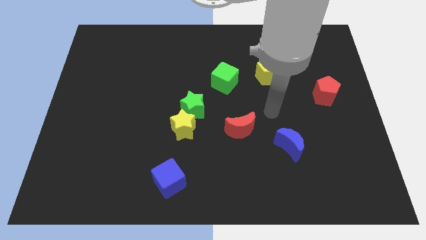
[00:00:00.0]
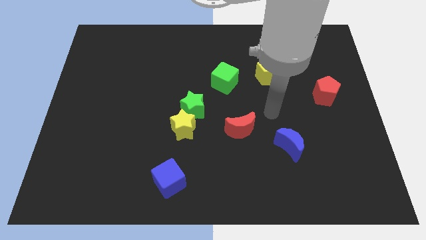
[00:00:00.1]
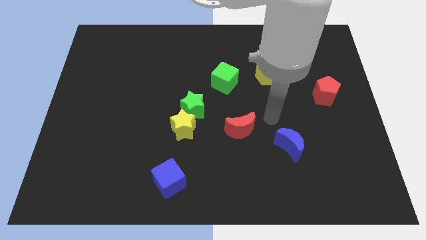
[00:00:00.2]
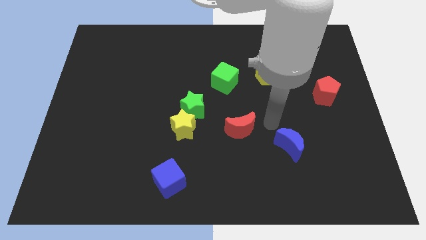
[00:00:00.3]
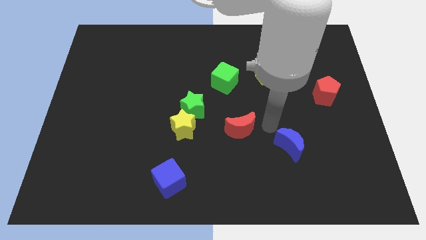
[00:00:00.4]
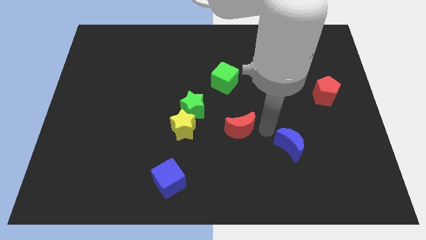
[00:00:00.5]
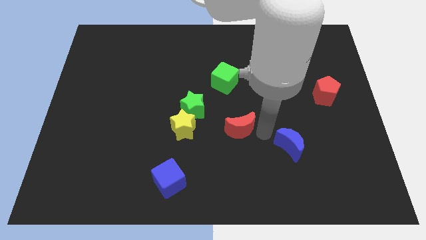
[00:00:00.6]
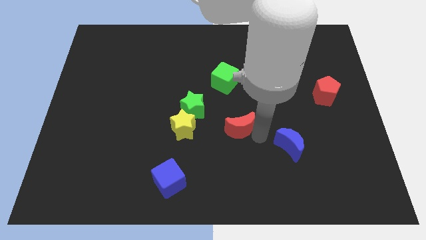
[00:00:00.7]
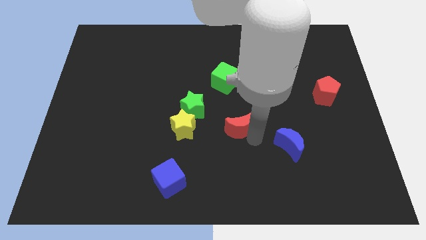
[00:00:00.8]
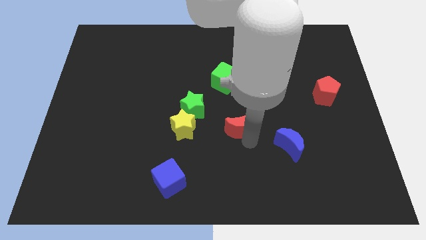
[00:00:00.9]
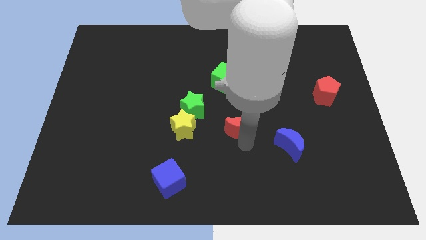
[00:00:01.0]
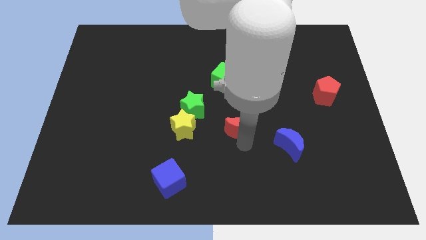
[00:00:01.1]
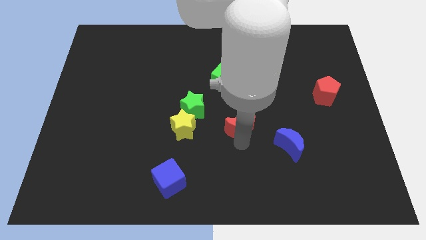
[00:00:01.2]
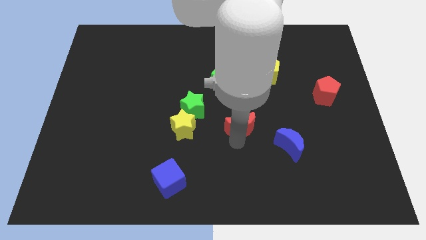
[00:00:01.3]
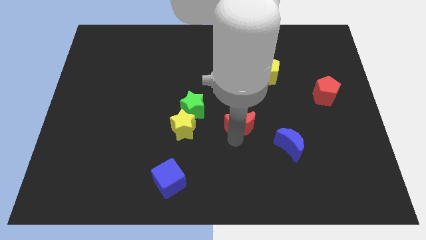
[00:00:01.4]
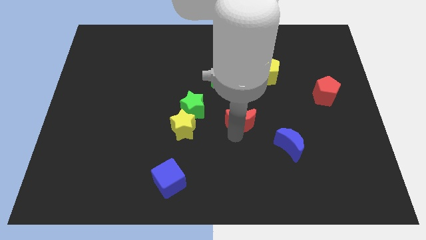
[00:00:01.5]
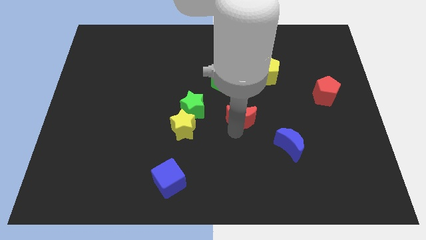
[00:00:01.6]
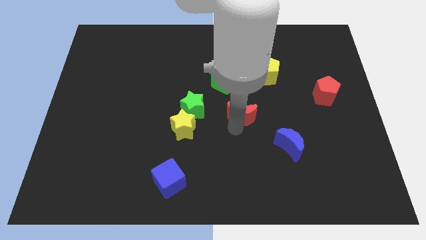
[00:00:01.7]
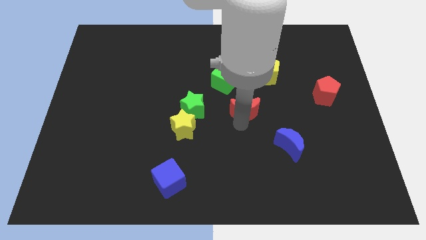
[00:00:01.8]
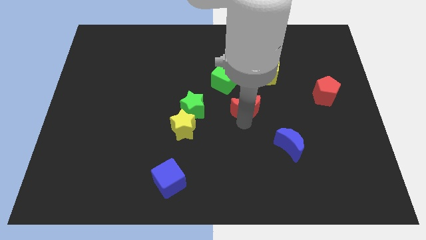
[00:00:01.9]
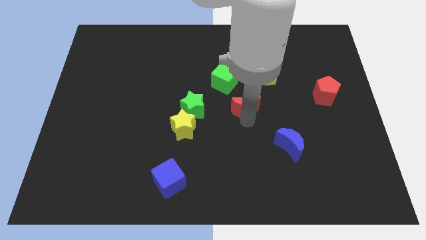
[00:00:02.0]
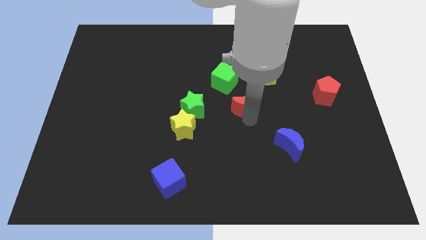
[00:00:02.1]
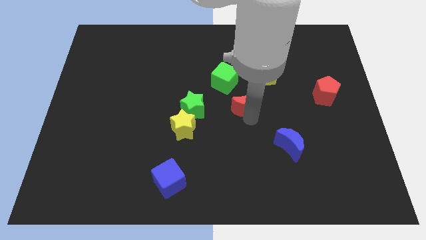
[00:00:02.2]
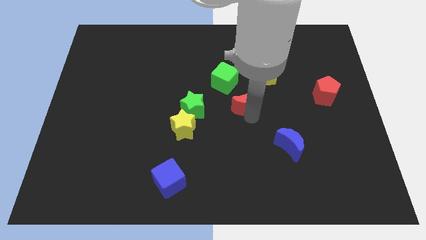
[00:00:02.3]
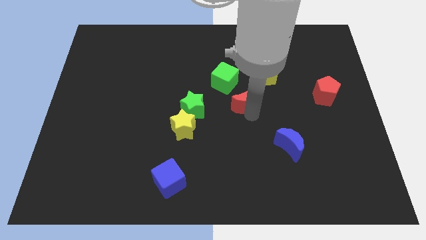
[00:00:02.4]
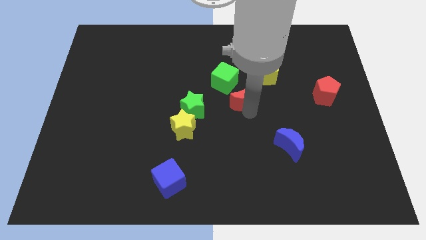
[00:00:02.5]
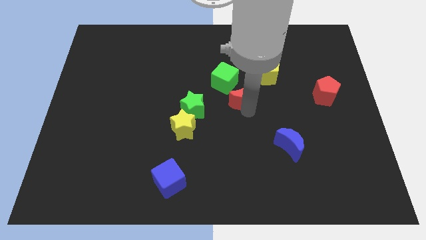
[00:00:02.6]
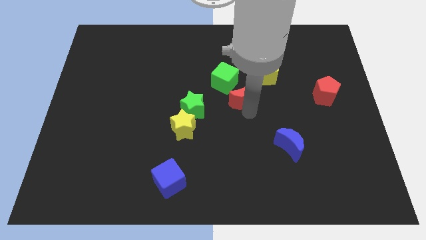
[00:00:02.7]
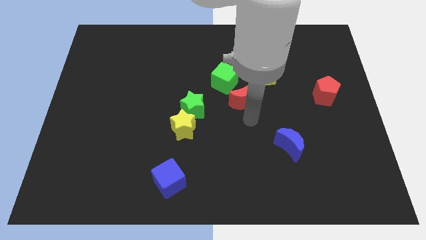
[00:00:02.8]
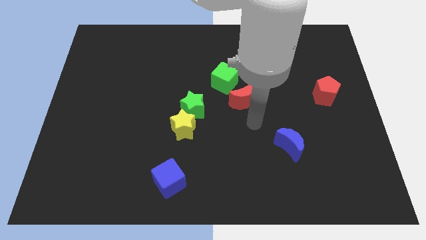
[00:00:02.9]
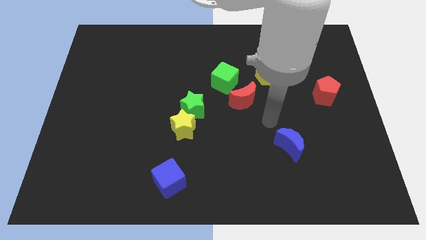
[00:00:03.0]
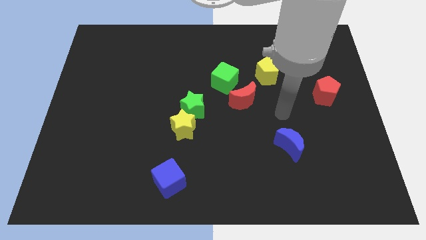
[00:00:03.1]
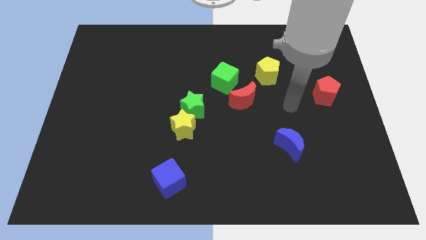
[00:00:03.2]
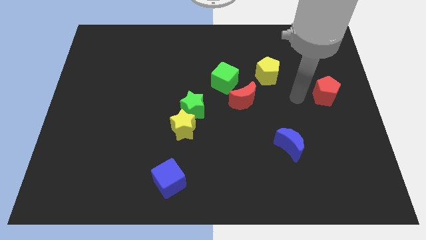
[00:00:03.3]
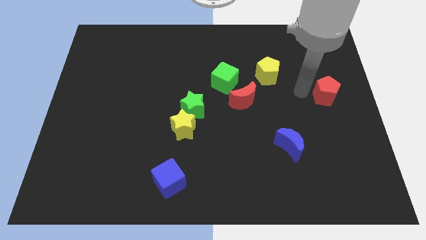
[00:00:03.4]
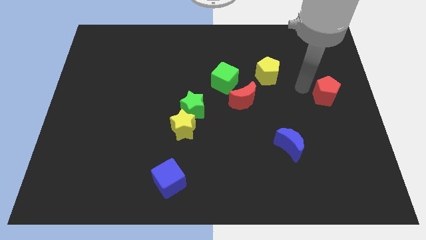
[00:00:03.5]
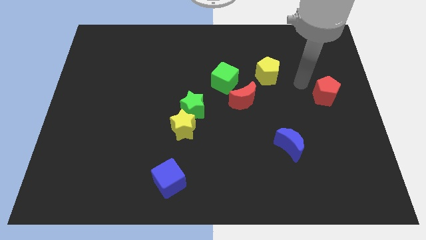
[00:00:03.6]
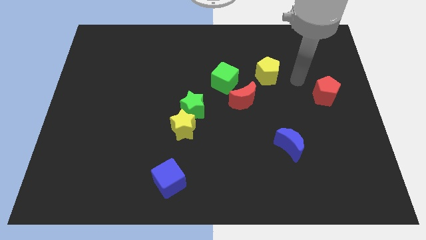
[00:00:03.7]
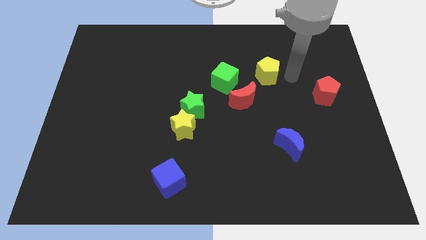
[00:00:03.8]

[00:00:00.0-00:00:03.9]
move the red crescent below to the green cube

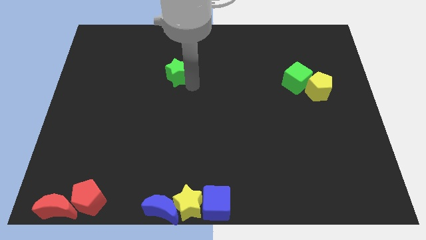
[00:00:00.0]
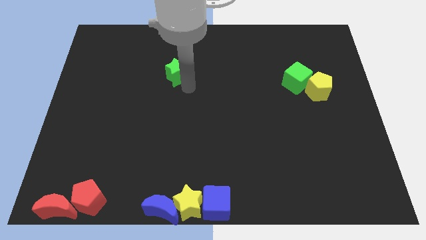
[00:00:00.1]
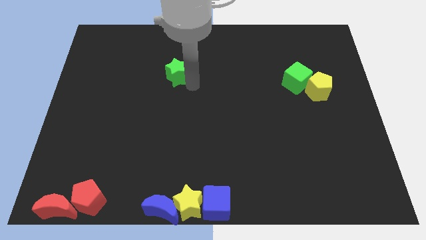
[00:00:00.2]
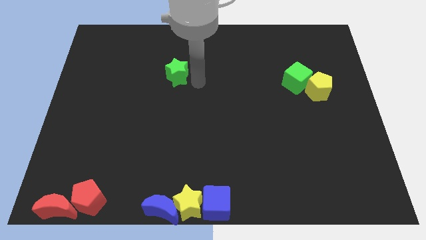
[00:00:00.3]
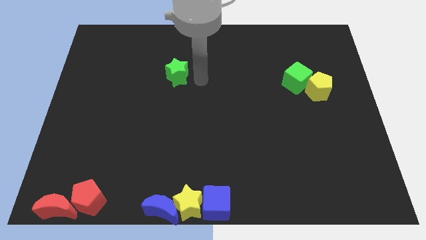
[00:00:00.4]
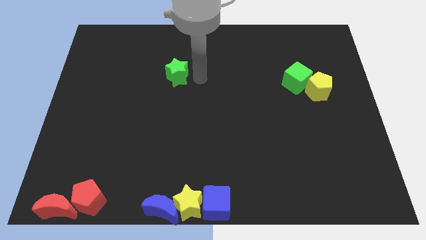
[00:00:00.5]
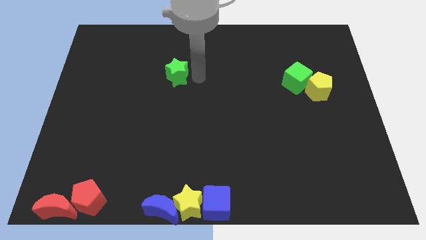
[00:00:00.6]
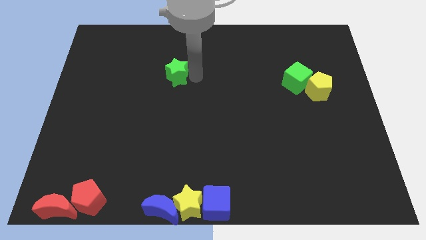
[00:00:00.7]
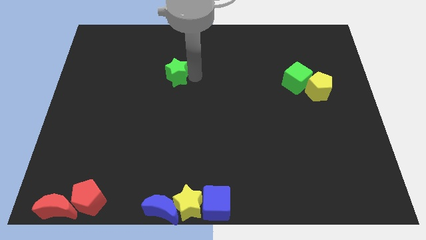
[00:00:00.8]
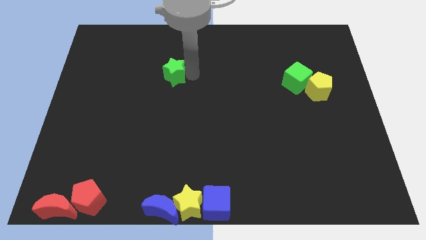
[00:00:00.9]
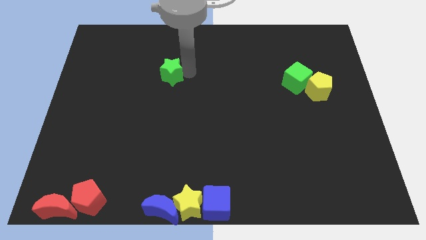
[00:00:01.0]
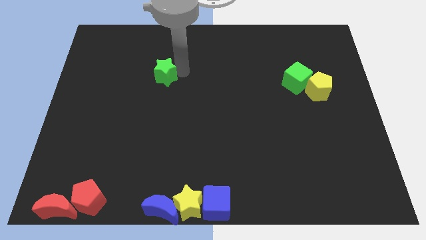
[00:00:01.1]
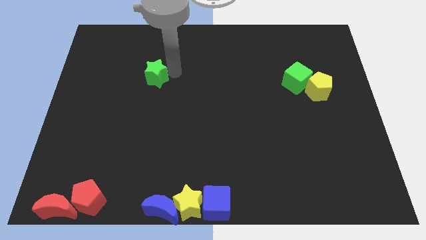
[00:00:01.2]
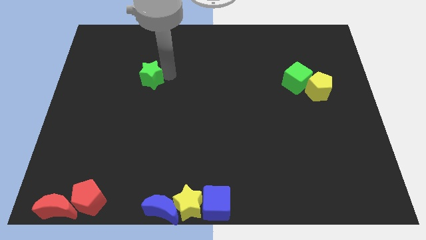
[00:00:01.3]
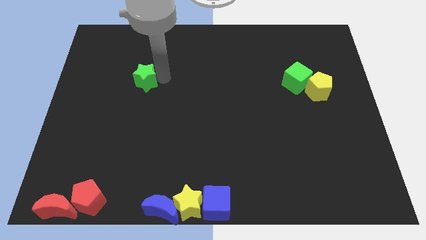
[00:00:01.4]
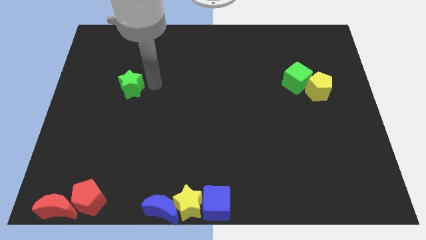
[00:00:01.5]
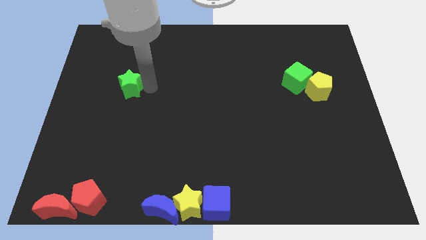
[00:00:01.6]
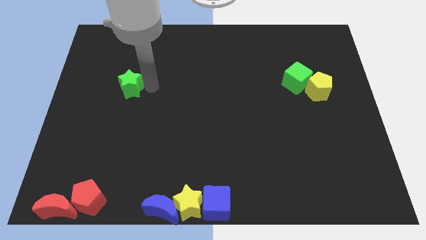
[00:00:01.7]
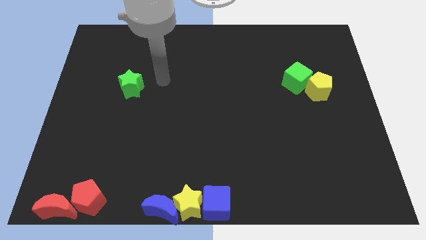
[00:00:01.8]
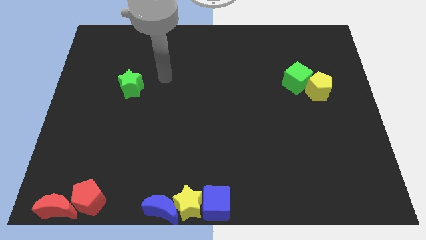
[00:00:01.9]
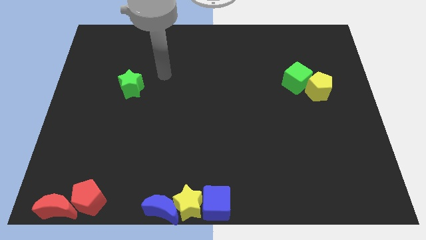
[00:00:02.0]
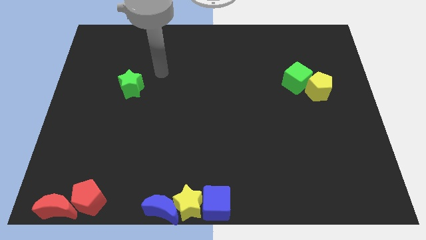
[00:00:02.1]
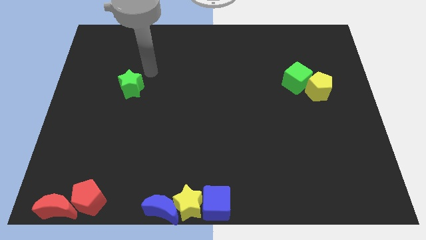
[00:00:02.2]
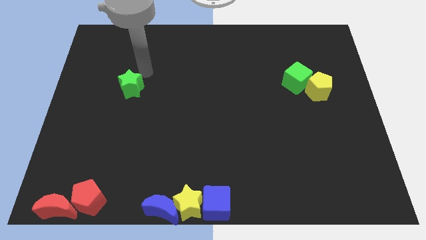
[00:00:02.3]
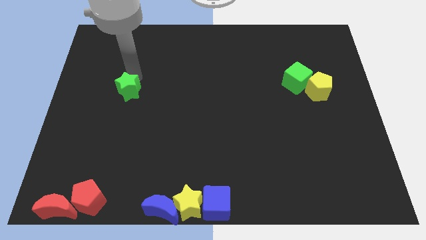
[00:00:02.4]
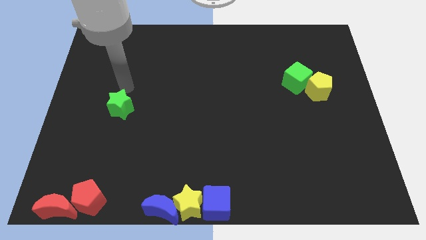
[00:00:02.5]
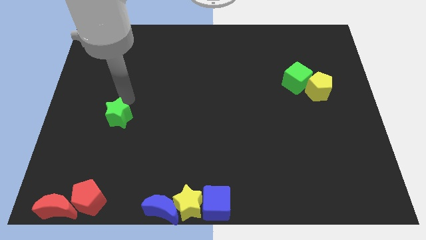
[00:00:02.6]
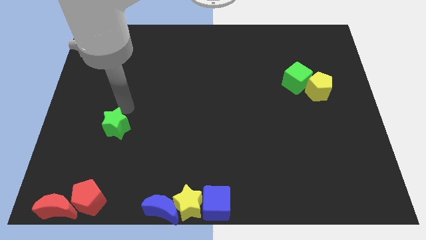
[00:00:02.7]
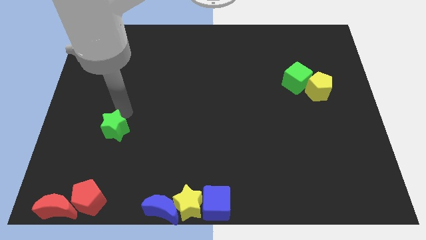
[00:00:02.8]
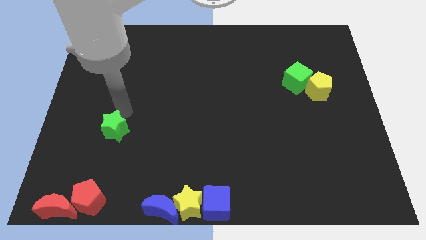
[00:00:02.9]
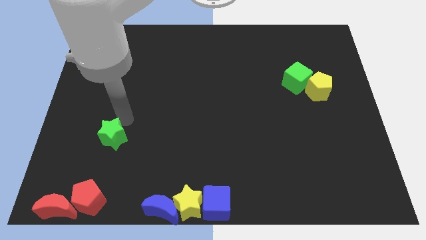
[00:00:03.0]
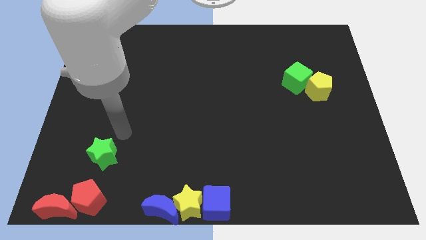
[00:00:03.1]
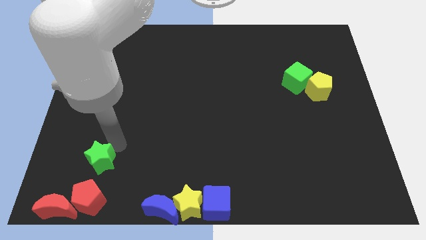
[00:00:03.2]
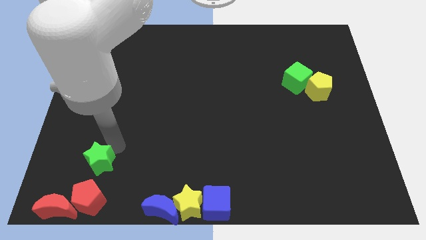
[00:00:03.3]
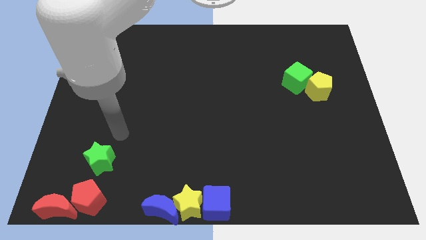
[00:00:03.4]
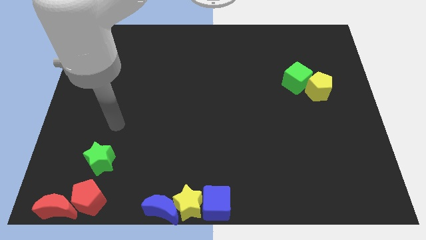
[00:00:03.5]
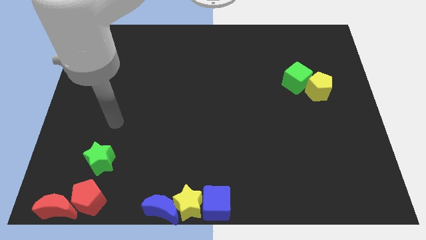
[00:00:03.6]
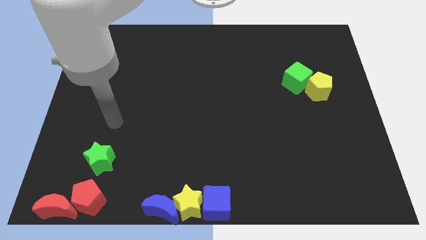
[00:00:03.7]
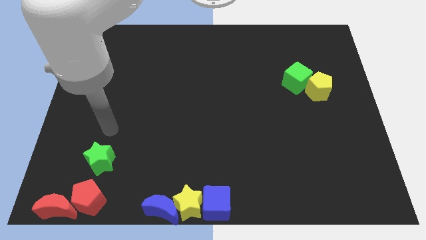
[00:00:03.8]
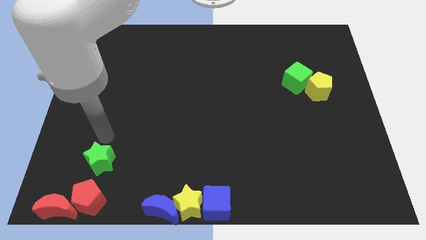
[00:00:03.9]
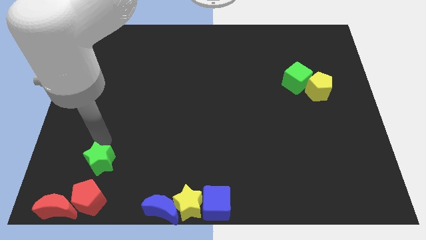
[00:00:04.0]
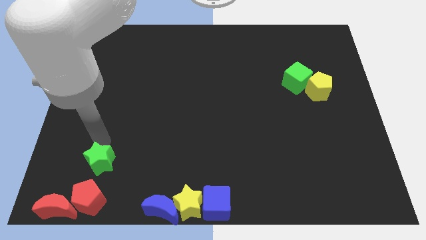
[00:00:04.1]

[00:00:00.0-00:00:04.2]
push the green star to the top of the red pentagon

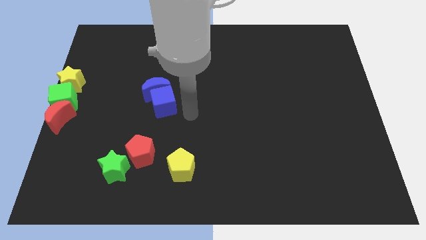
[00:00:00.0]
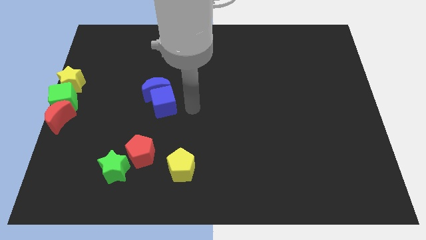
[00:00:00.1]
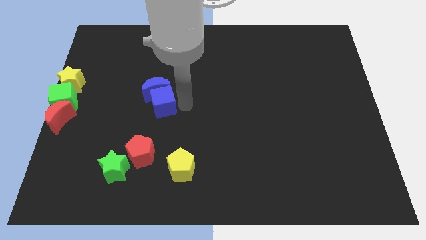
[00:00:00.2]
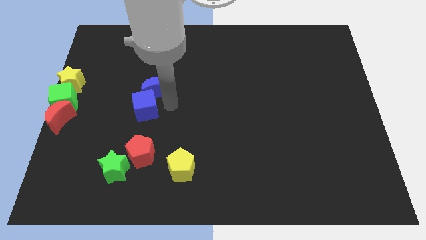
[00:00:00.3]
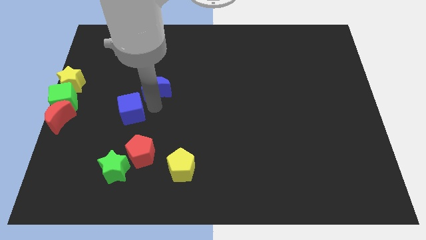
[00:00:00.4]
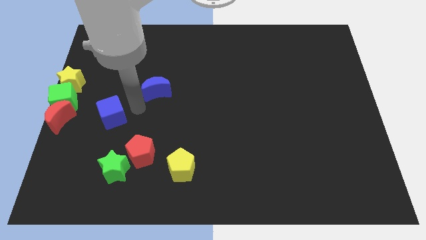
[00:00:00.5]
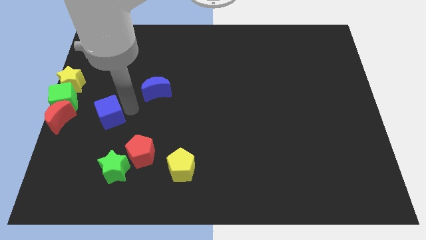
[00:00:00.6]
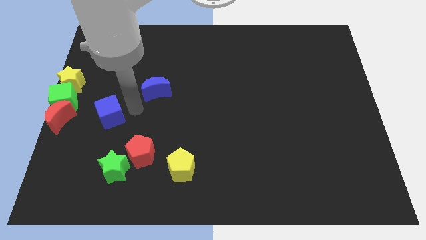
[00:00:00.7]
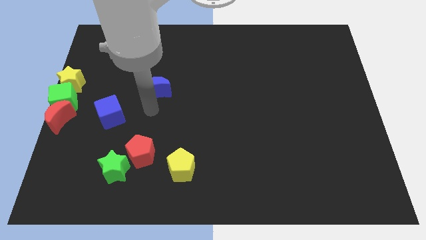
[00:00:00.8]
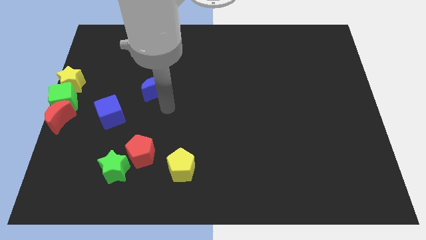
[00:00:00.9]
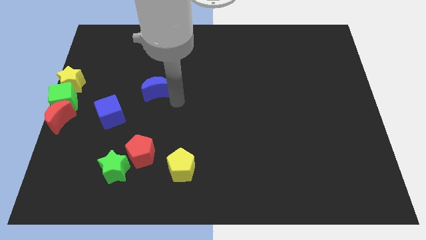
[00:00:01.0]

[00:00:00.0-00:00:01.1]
push the blue cube to the right of the red moon
